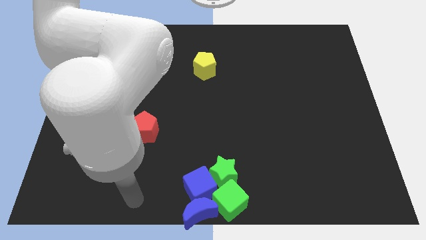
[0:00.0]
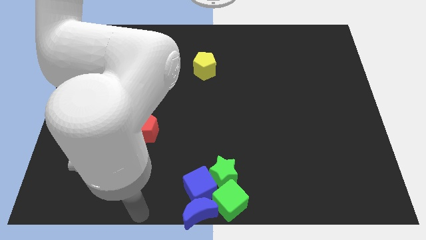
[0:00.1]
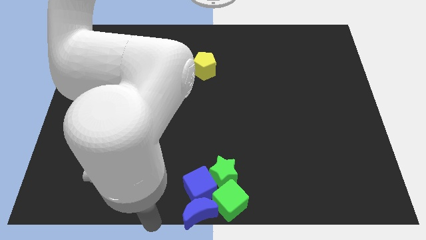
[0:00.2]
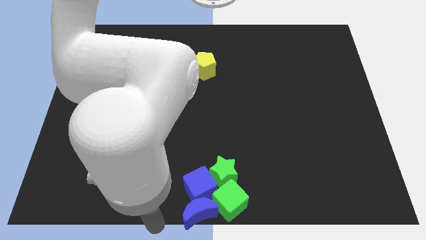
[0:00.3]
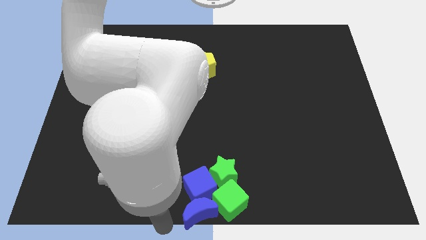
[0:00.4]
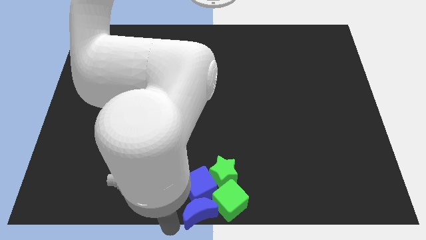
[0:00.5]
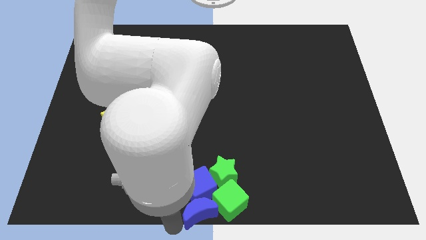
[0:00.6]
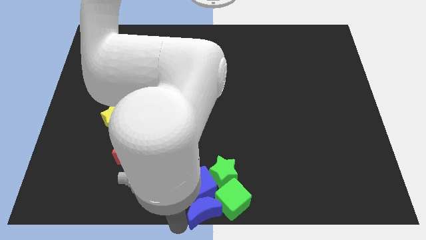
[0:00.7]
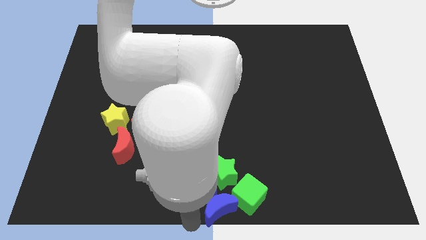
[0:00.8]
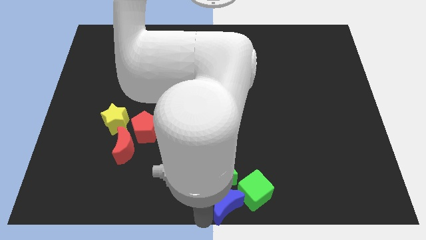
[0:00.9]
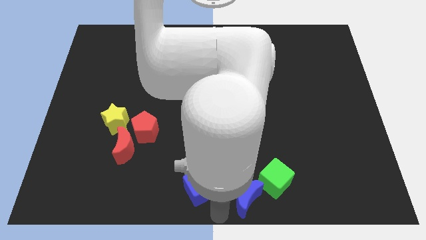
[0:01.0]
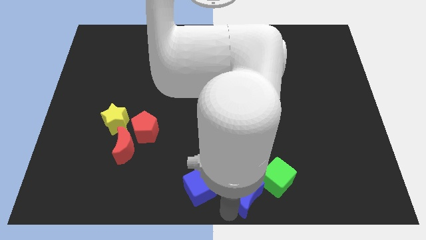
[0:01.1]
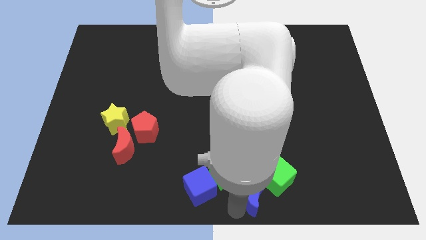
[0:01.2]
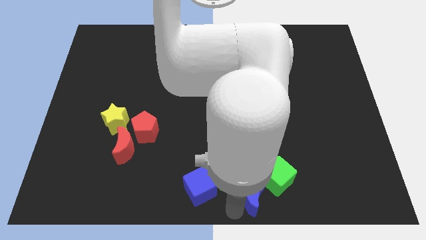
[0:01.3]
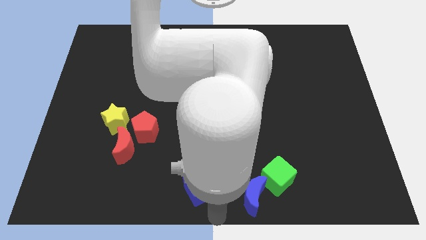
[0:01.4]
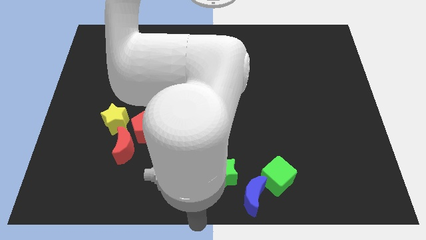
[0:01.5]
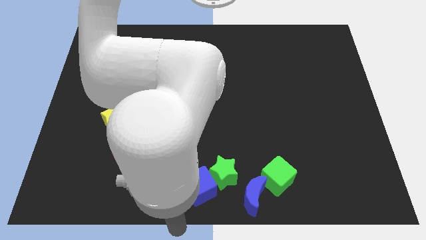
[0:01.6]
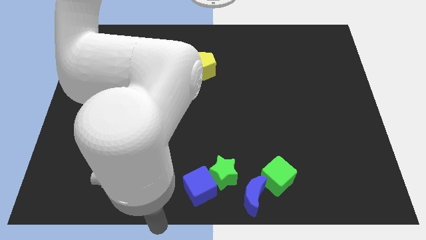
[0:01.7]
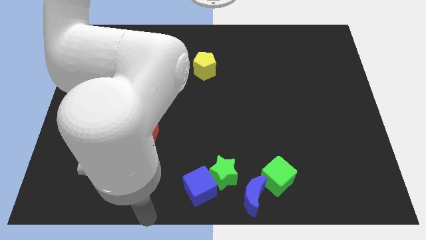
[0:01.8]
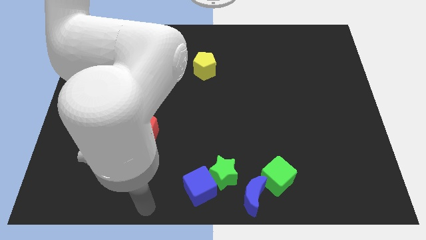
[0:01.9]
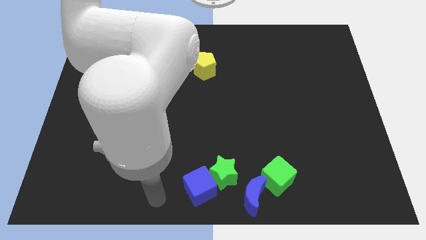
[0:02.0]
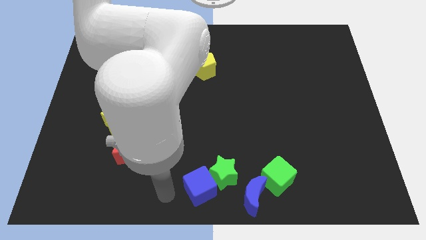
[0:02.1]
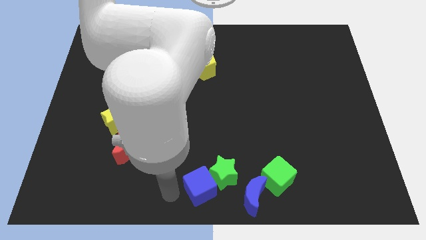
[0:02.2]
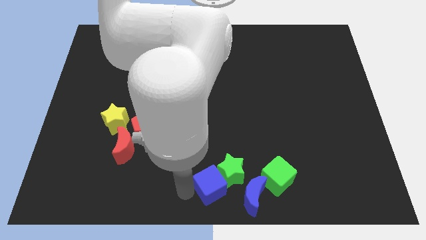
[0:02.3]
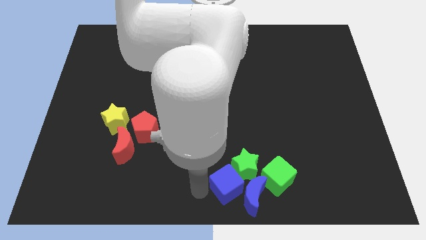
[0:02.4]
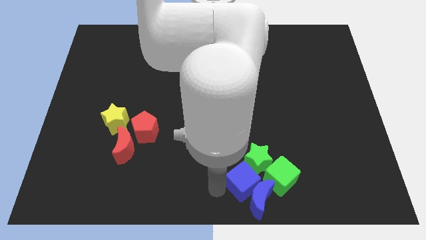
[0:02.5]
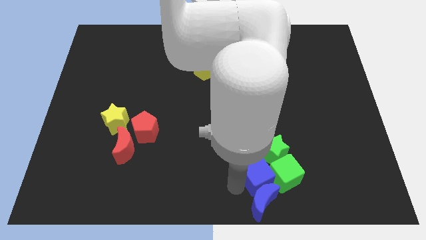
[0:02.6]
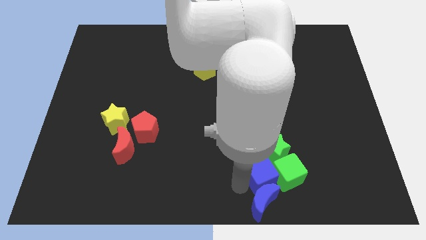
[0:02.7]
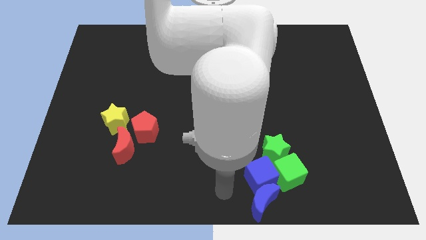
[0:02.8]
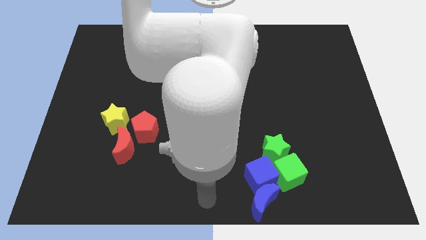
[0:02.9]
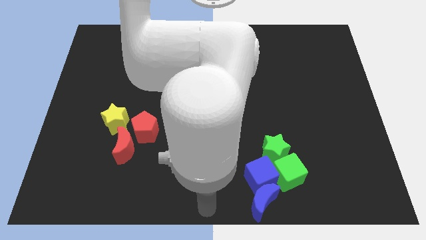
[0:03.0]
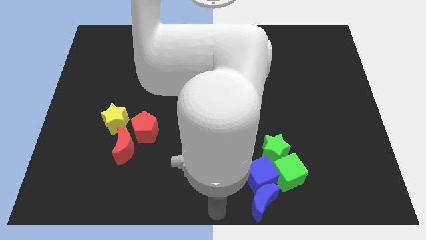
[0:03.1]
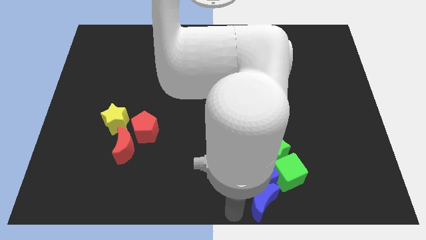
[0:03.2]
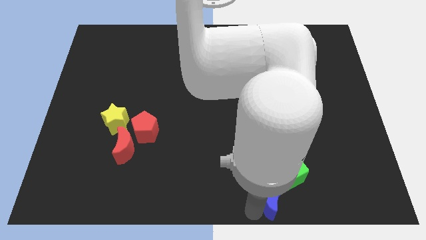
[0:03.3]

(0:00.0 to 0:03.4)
push group of blue green blocks towards center right

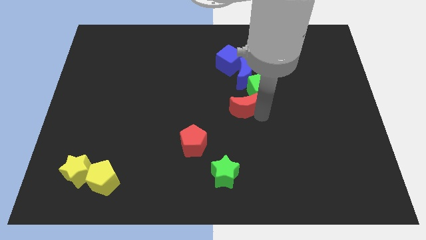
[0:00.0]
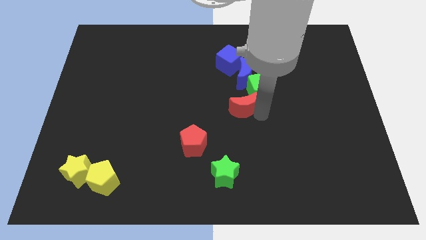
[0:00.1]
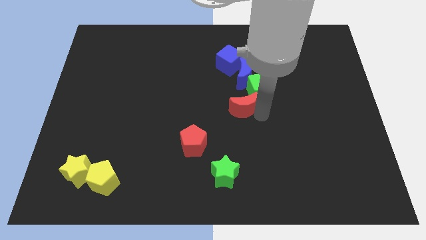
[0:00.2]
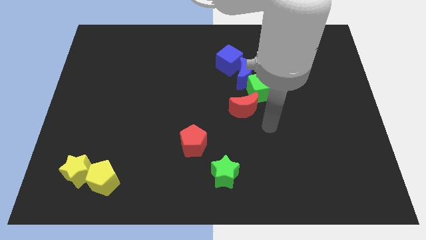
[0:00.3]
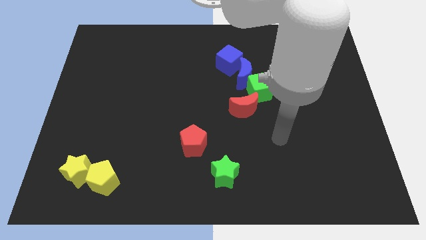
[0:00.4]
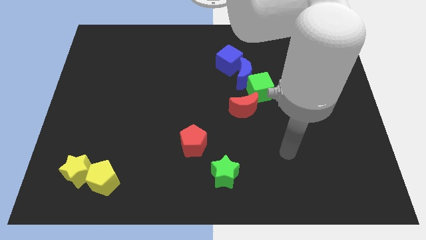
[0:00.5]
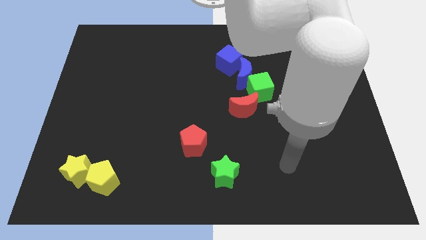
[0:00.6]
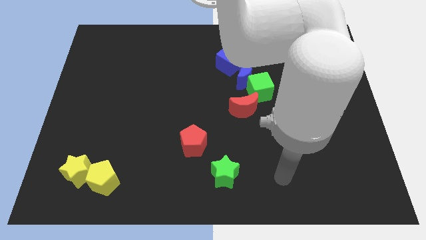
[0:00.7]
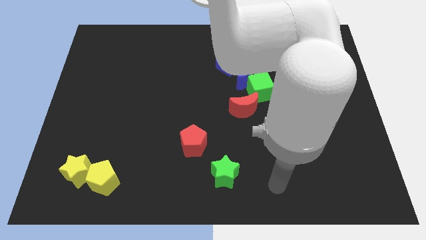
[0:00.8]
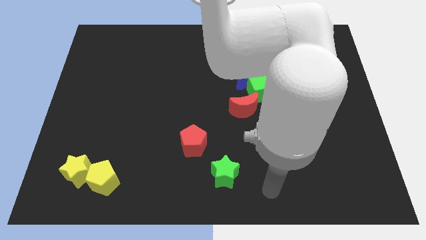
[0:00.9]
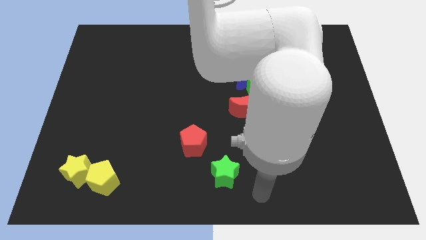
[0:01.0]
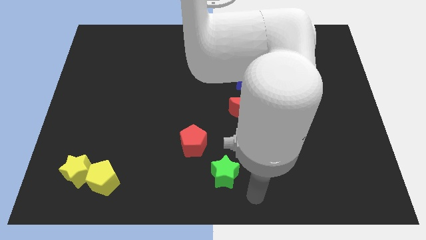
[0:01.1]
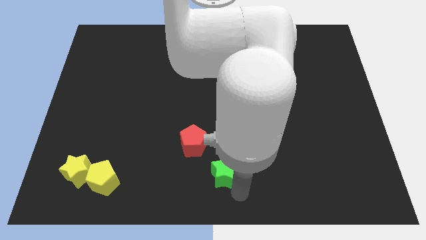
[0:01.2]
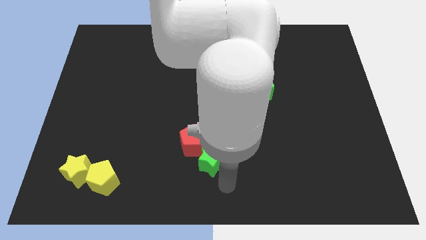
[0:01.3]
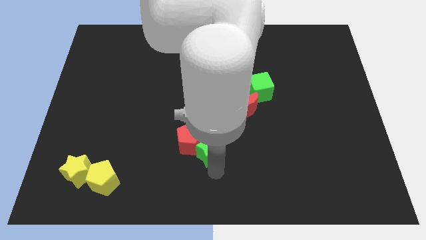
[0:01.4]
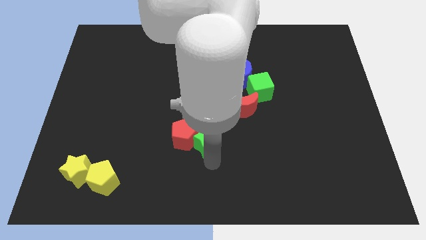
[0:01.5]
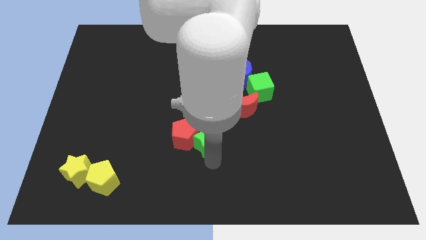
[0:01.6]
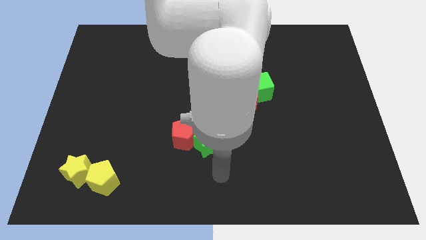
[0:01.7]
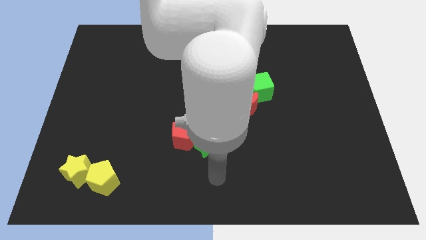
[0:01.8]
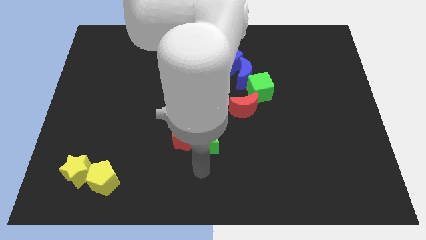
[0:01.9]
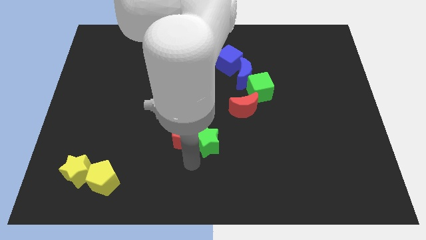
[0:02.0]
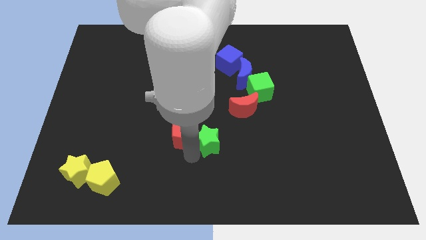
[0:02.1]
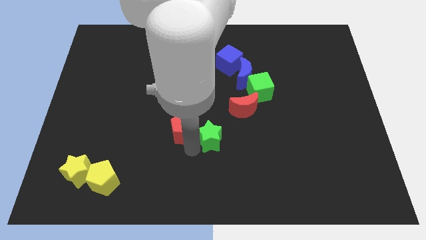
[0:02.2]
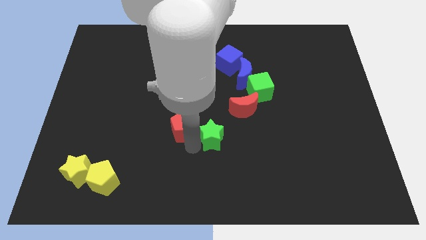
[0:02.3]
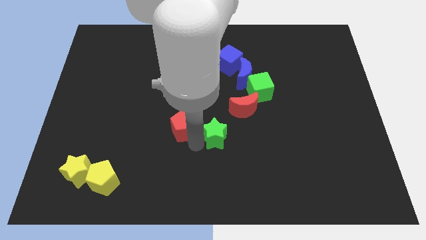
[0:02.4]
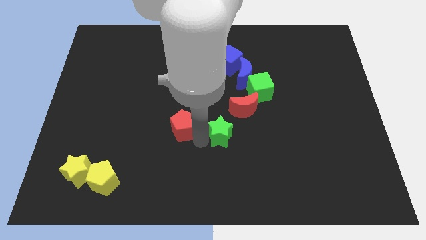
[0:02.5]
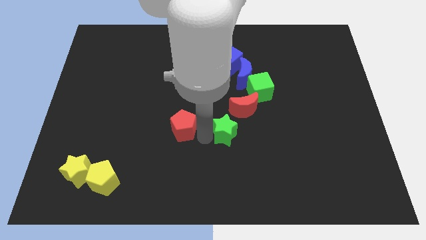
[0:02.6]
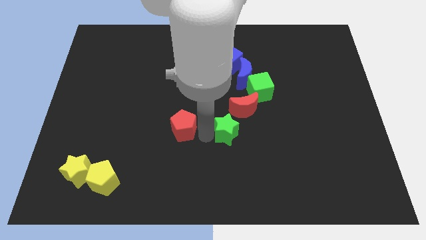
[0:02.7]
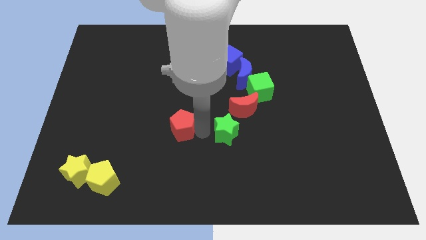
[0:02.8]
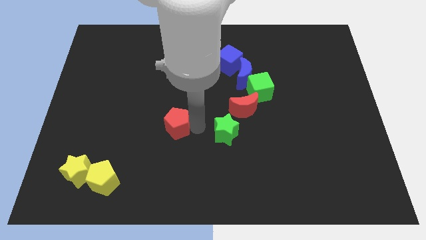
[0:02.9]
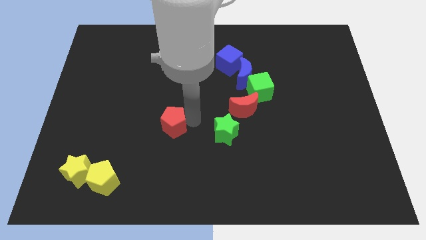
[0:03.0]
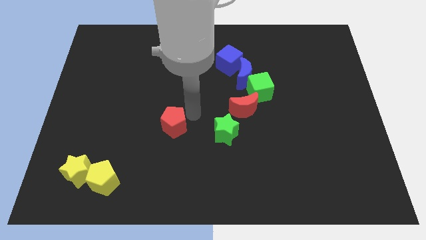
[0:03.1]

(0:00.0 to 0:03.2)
separate red pentagon and green star

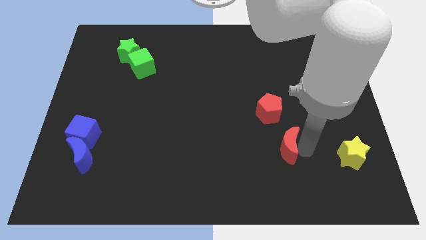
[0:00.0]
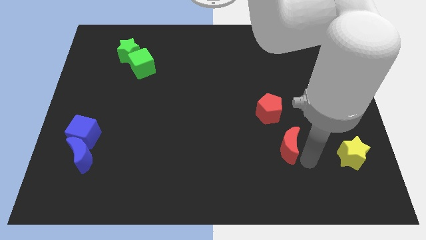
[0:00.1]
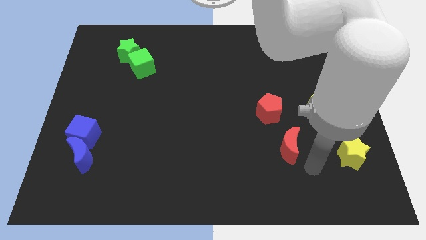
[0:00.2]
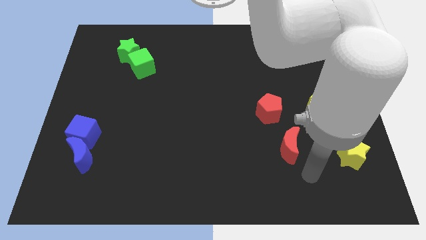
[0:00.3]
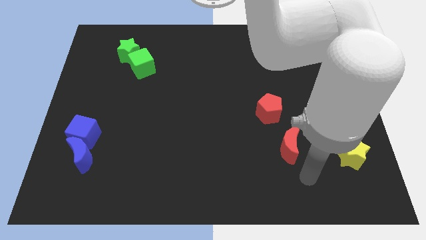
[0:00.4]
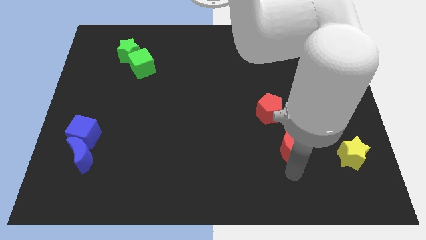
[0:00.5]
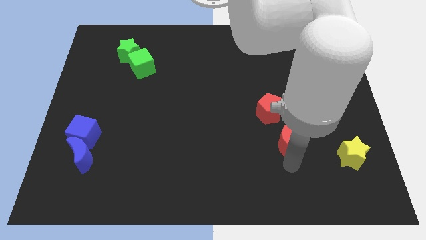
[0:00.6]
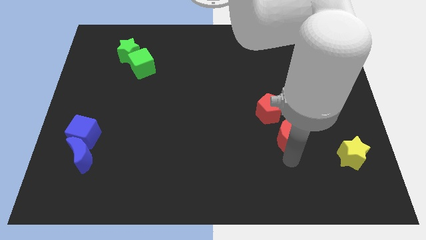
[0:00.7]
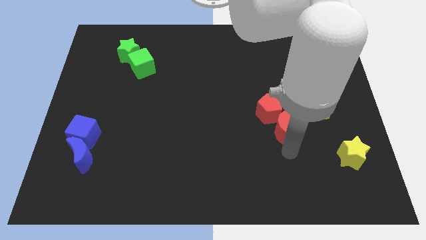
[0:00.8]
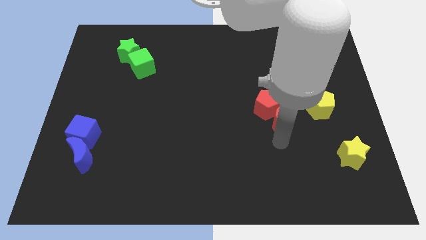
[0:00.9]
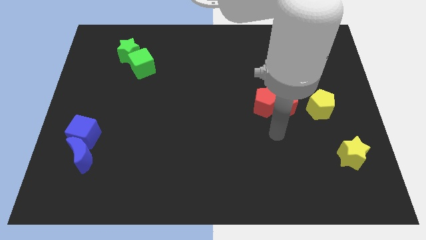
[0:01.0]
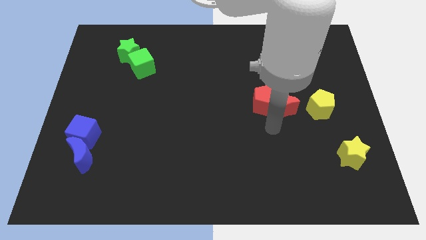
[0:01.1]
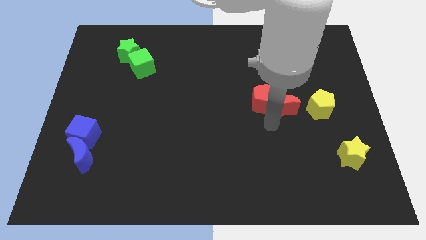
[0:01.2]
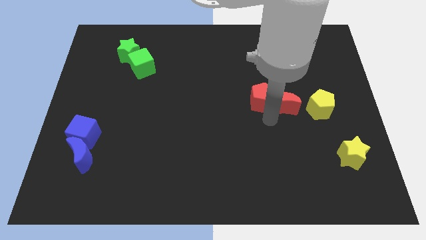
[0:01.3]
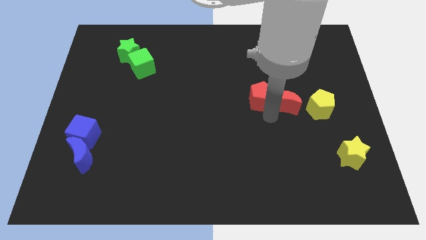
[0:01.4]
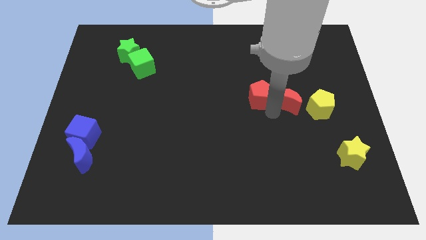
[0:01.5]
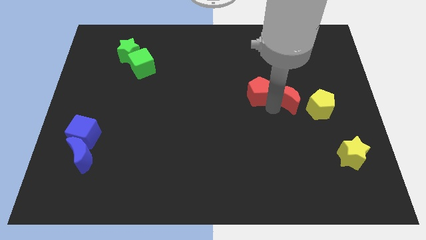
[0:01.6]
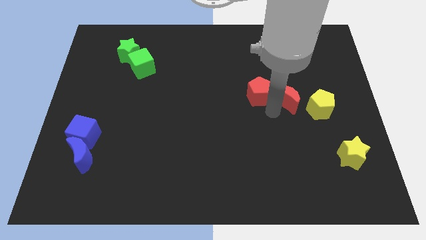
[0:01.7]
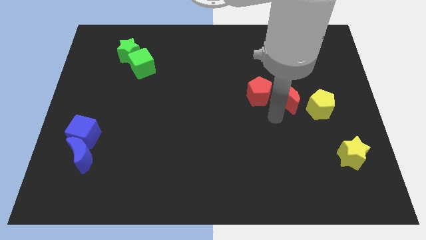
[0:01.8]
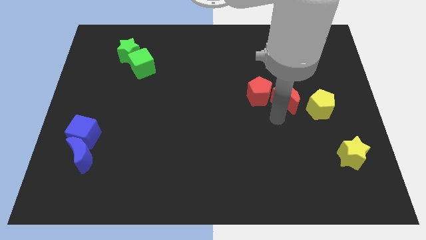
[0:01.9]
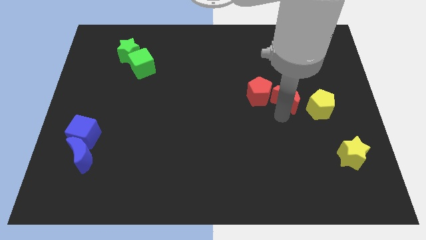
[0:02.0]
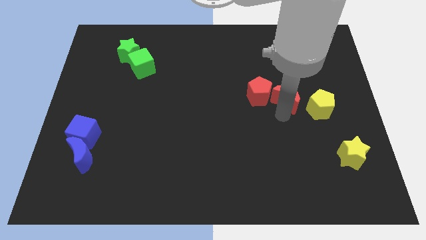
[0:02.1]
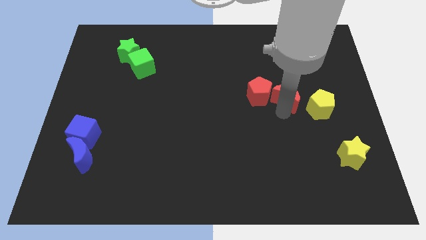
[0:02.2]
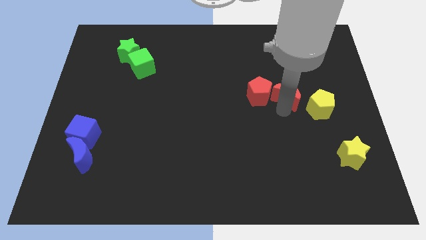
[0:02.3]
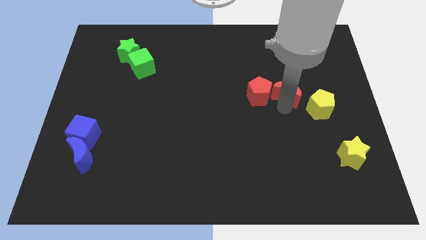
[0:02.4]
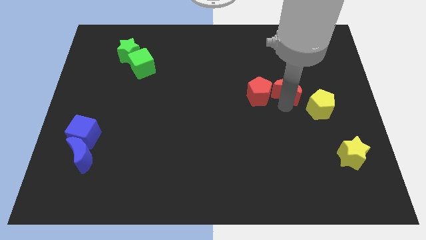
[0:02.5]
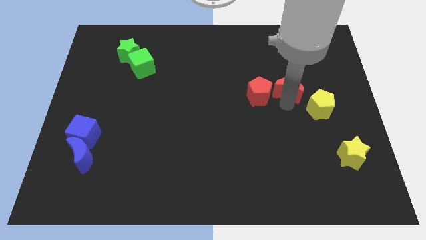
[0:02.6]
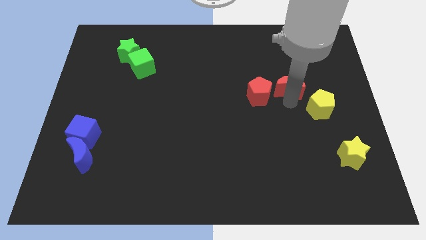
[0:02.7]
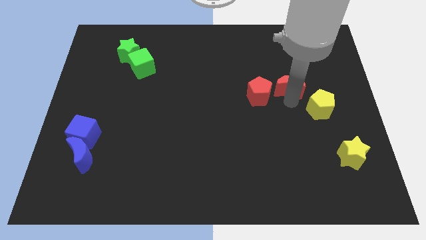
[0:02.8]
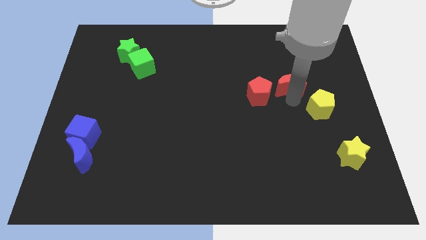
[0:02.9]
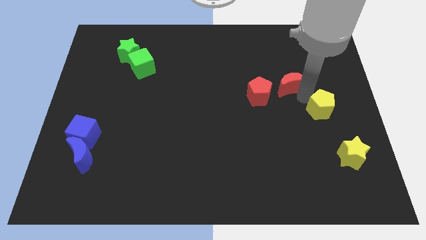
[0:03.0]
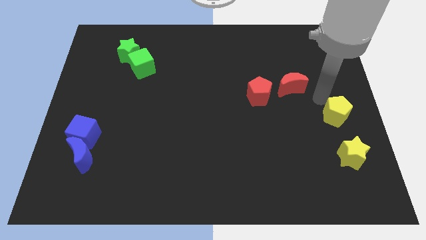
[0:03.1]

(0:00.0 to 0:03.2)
take the red moon to the right side of the red pentagon
